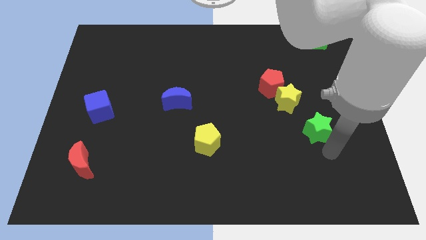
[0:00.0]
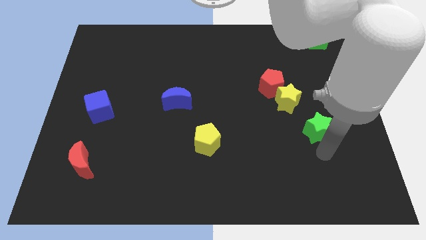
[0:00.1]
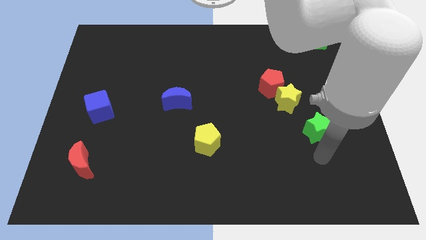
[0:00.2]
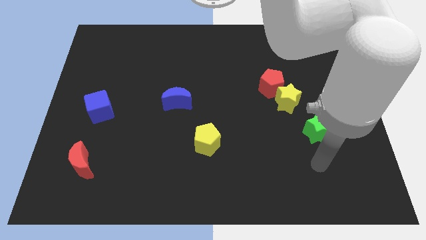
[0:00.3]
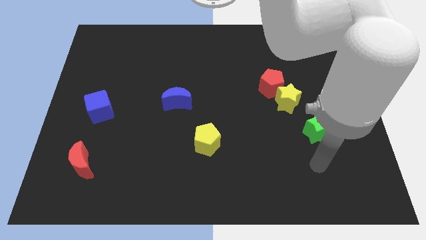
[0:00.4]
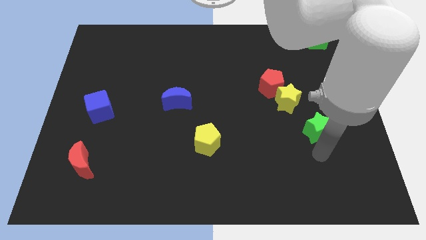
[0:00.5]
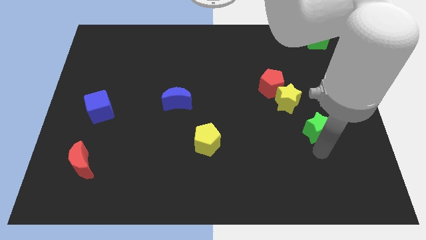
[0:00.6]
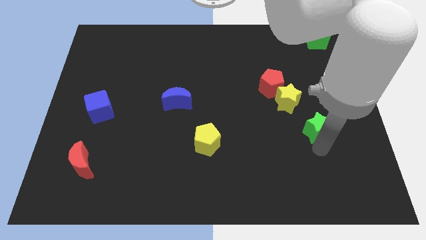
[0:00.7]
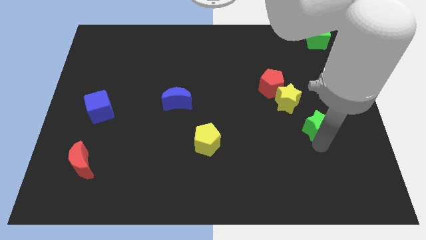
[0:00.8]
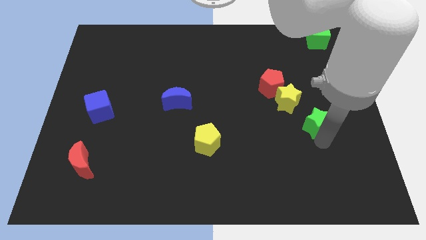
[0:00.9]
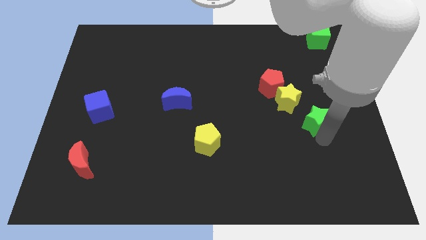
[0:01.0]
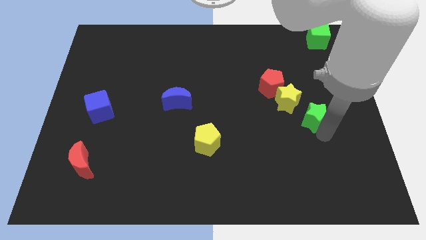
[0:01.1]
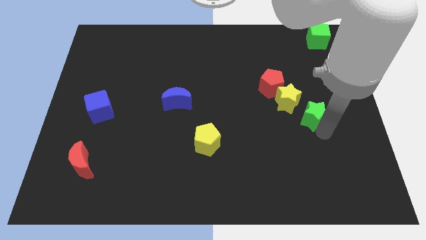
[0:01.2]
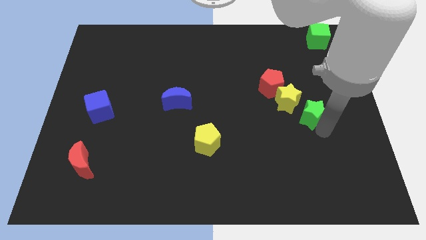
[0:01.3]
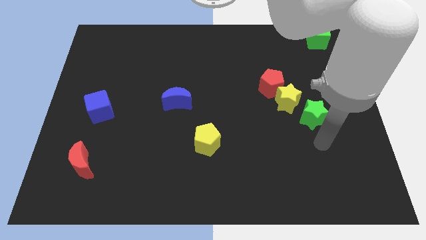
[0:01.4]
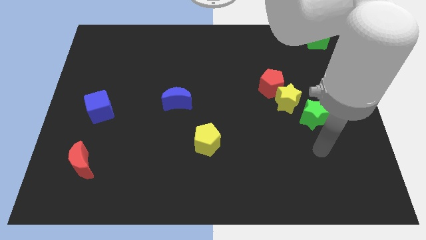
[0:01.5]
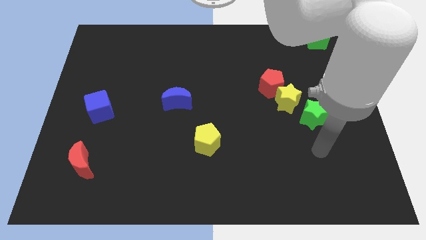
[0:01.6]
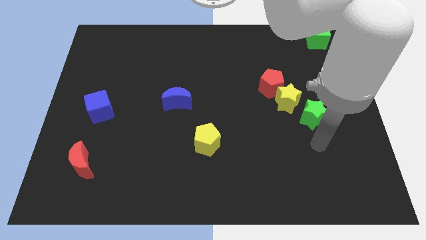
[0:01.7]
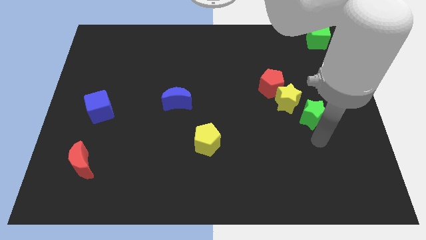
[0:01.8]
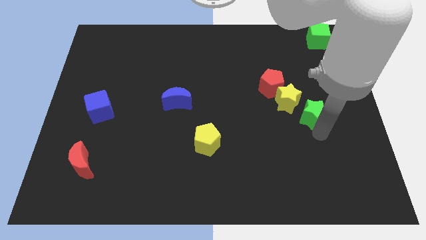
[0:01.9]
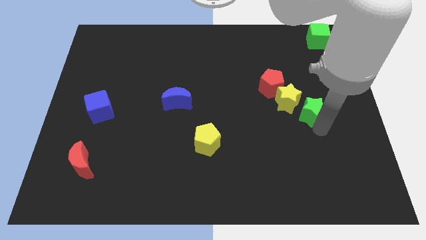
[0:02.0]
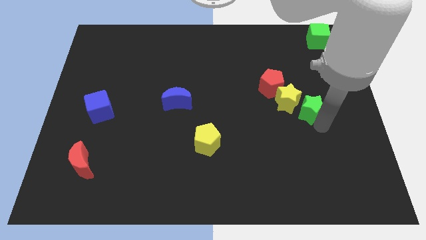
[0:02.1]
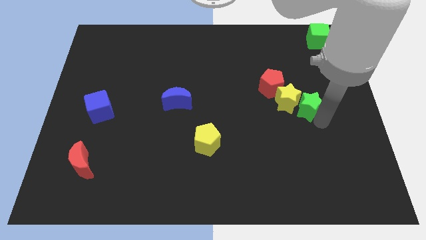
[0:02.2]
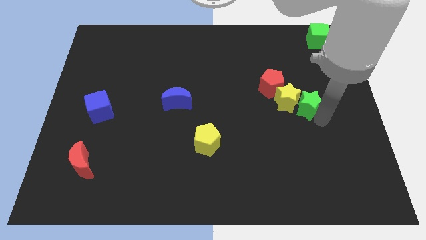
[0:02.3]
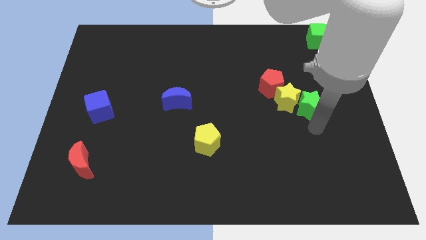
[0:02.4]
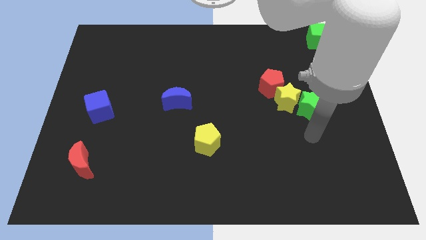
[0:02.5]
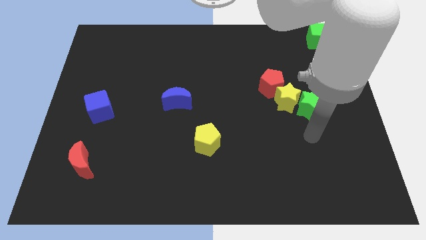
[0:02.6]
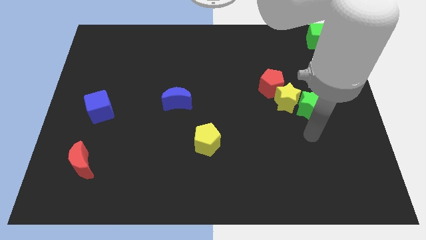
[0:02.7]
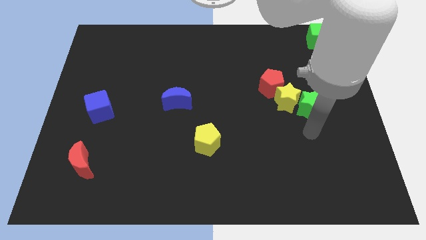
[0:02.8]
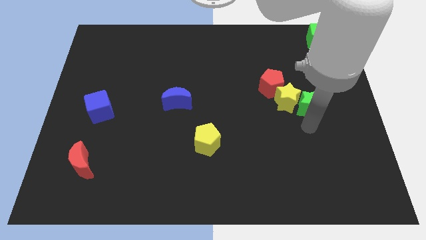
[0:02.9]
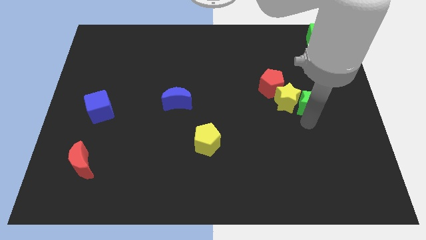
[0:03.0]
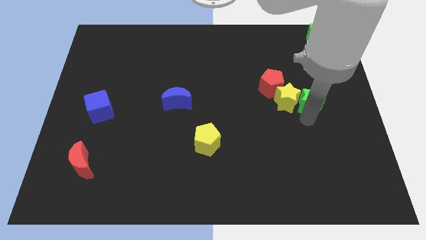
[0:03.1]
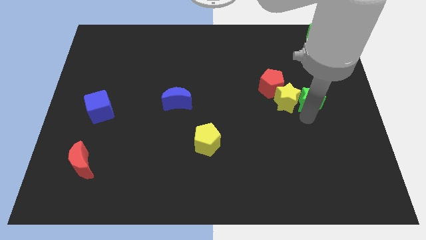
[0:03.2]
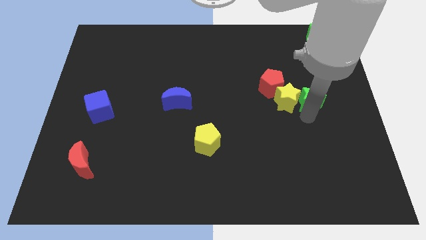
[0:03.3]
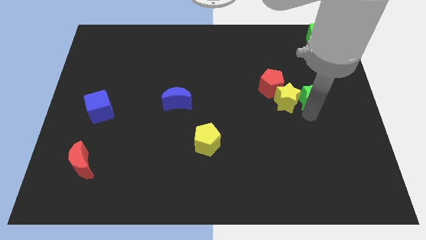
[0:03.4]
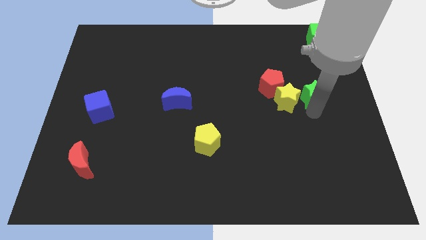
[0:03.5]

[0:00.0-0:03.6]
move green star close to the right of the yellow star

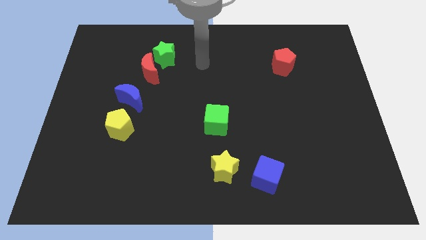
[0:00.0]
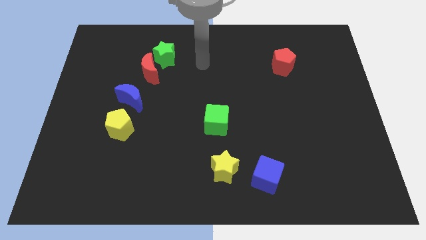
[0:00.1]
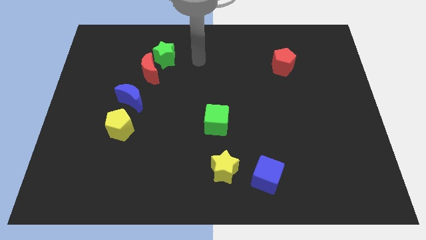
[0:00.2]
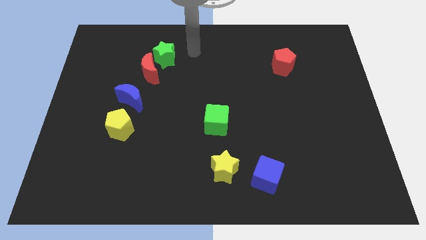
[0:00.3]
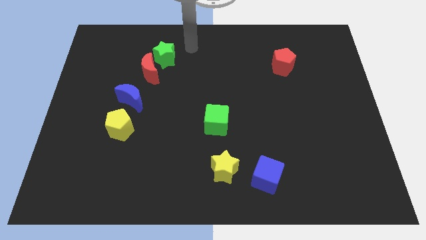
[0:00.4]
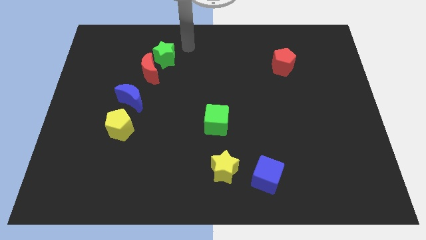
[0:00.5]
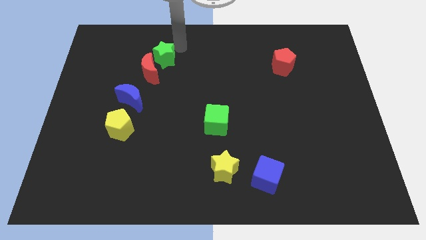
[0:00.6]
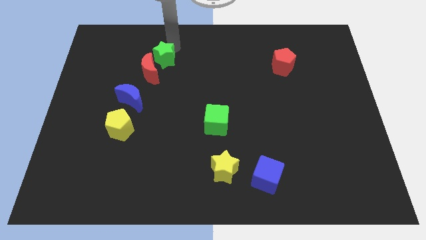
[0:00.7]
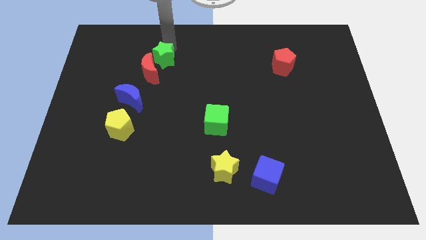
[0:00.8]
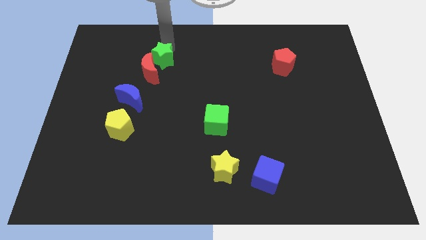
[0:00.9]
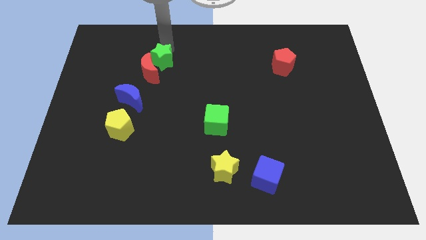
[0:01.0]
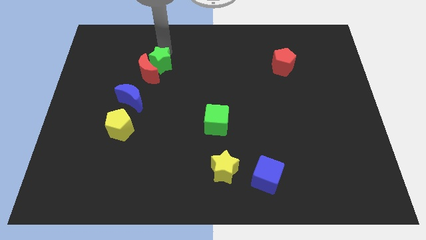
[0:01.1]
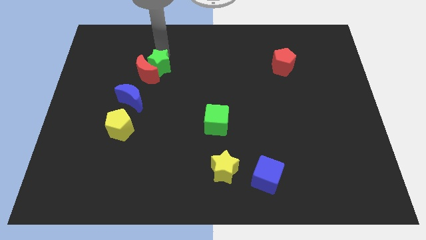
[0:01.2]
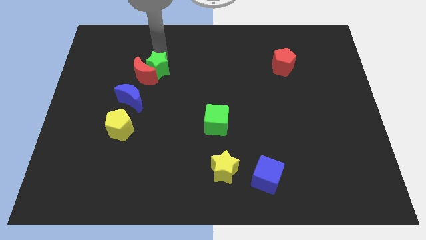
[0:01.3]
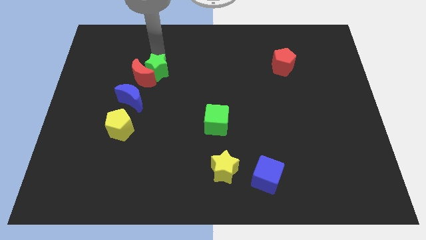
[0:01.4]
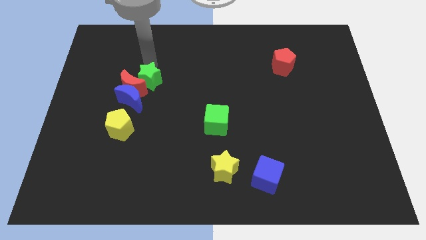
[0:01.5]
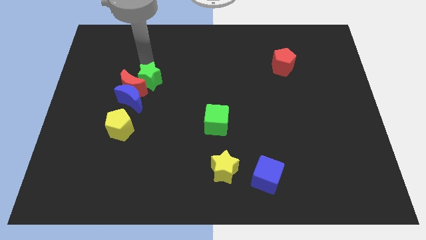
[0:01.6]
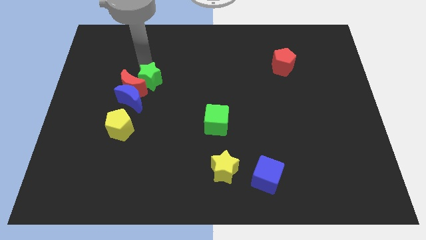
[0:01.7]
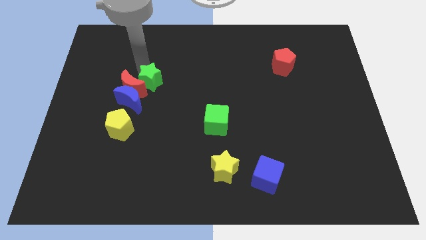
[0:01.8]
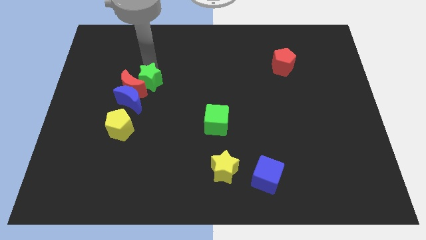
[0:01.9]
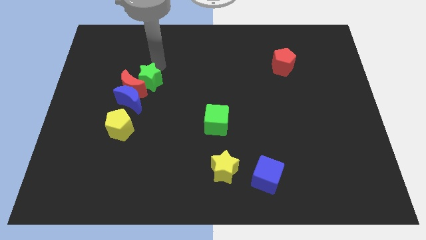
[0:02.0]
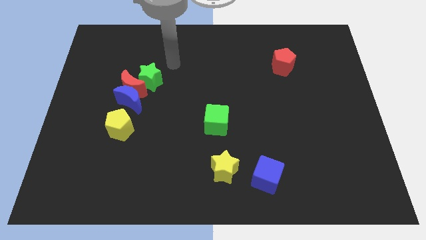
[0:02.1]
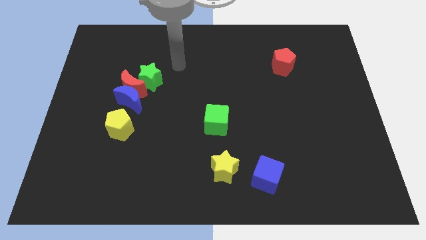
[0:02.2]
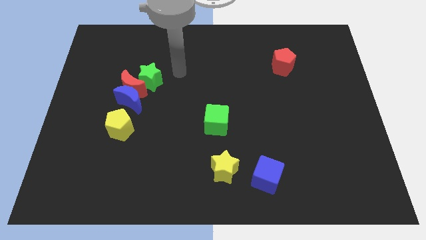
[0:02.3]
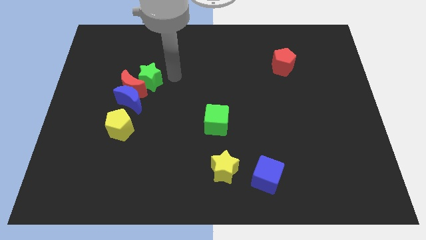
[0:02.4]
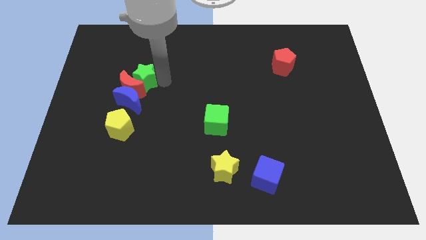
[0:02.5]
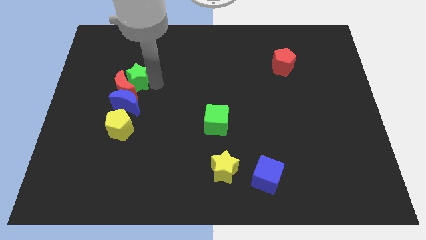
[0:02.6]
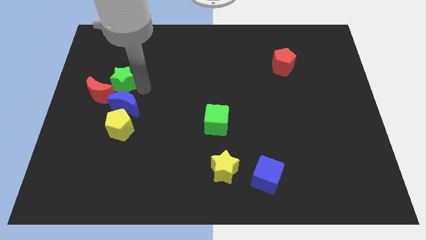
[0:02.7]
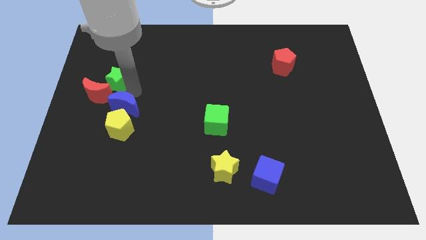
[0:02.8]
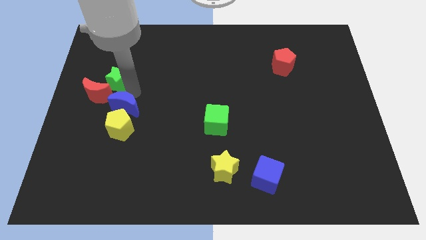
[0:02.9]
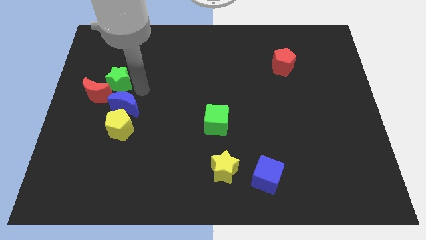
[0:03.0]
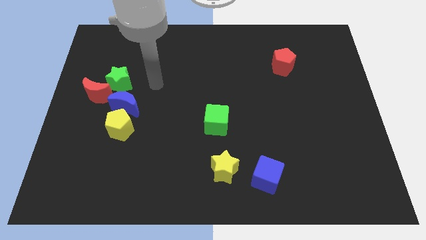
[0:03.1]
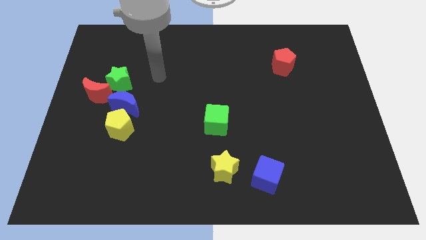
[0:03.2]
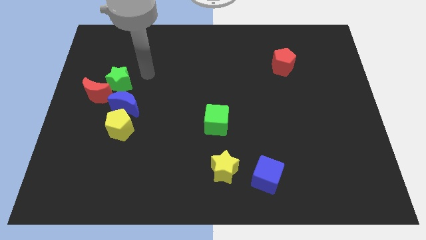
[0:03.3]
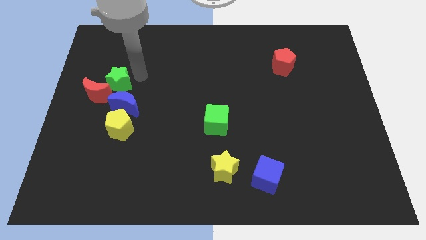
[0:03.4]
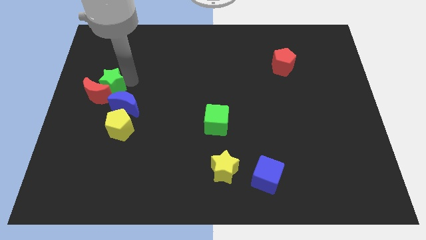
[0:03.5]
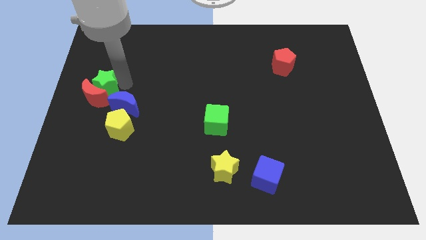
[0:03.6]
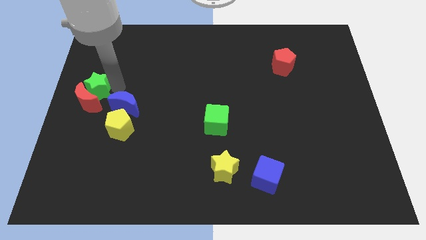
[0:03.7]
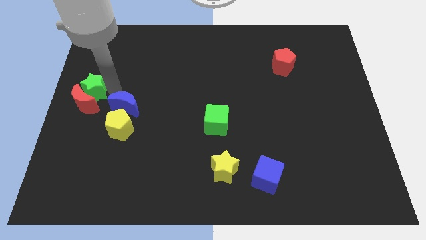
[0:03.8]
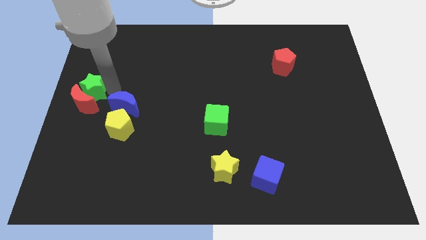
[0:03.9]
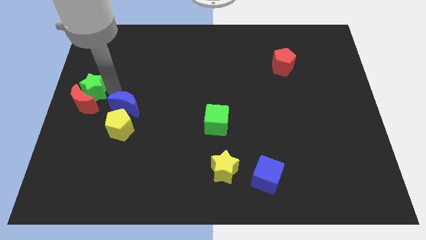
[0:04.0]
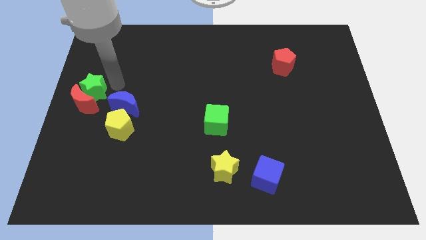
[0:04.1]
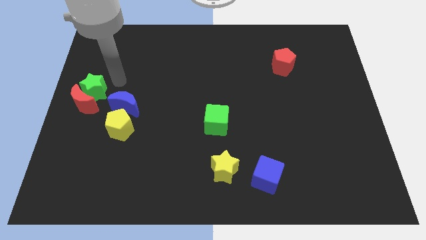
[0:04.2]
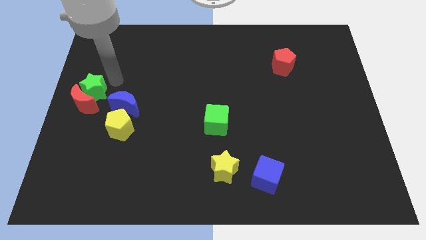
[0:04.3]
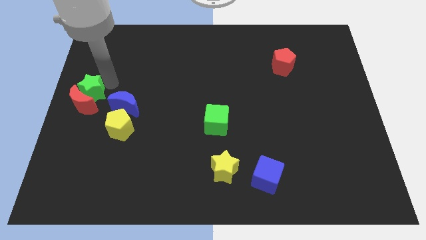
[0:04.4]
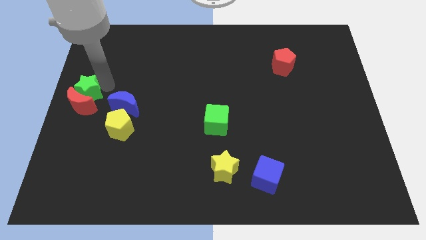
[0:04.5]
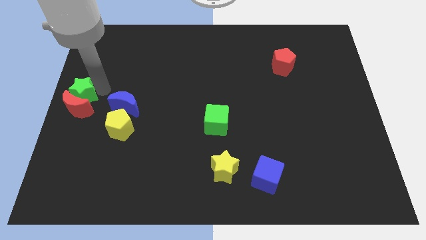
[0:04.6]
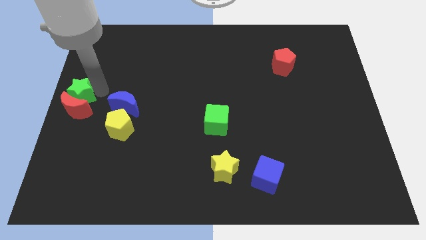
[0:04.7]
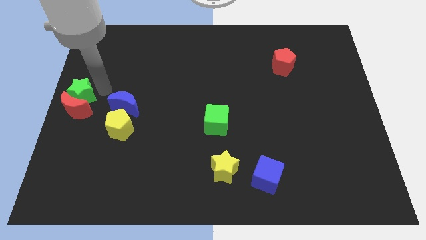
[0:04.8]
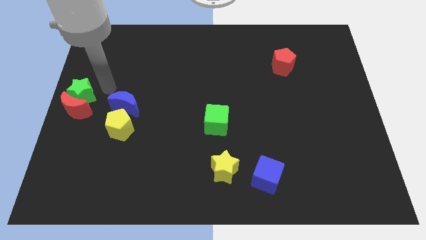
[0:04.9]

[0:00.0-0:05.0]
move the green star into the red crescent towards the left center of the board

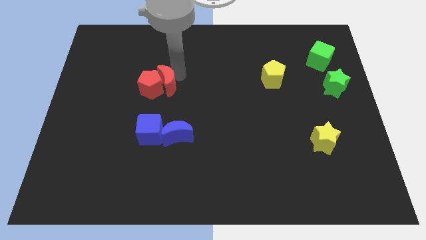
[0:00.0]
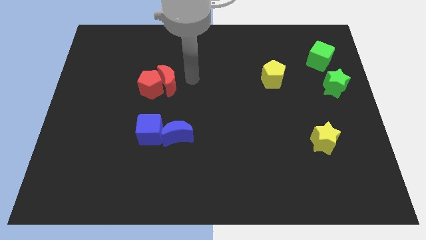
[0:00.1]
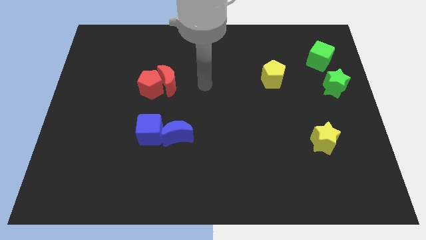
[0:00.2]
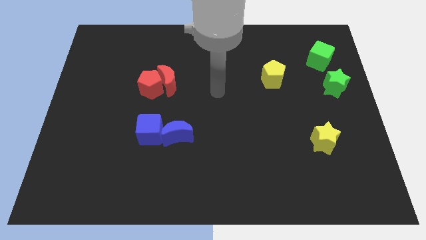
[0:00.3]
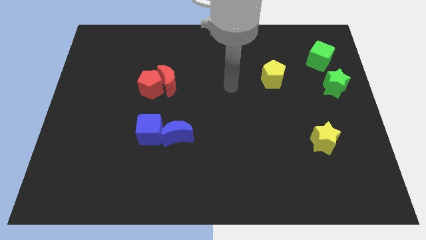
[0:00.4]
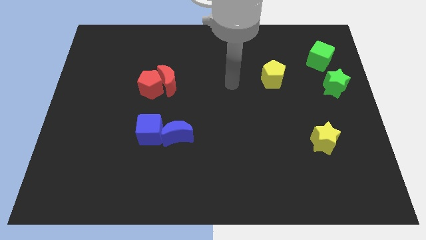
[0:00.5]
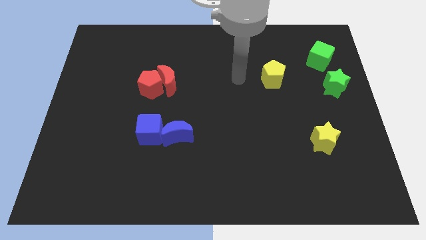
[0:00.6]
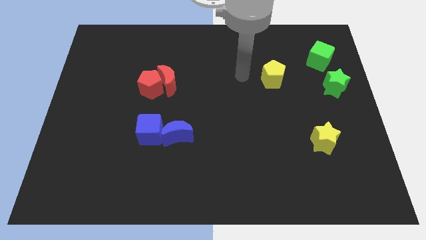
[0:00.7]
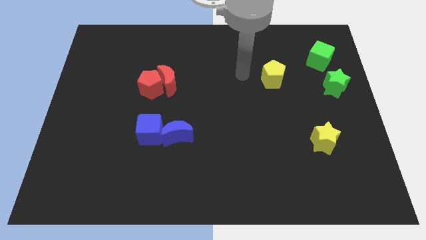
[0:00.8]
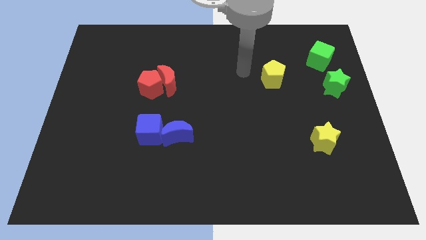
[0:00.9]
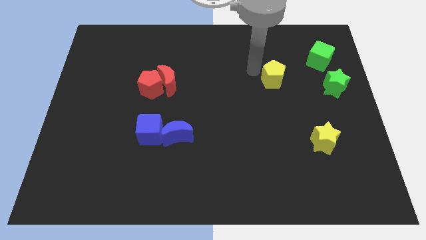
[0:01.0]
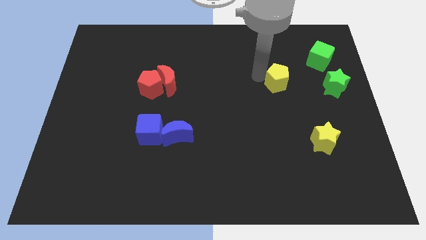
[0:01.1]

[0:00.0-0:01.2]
move your hand away from the red crescent
